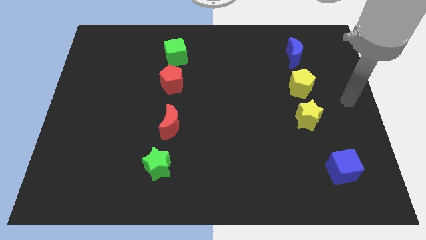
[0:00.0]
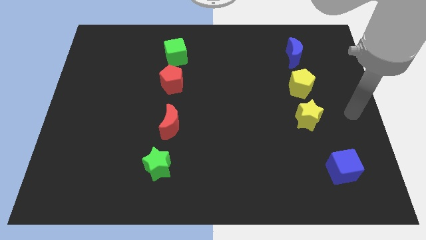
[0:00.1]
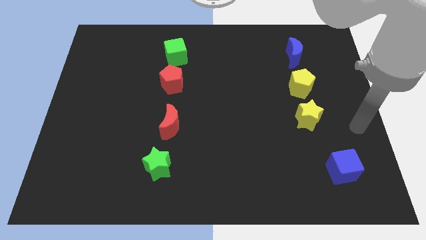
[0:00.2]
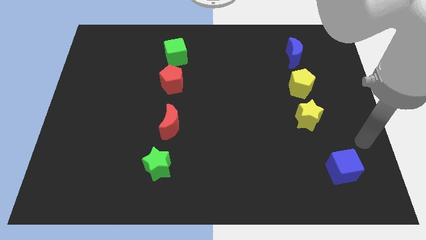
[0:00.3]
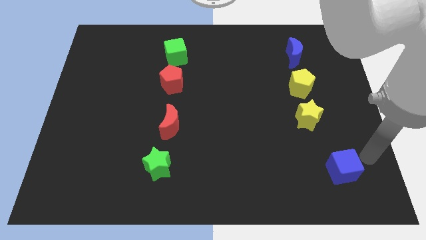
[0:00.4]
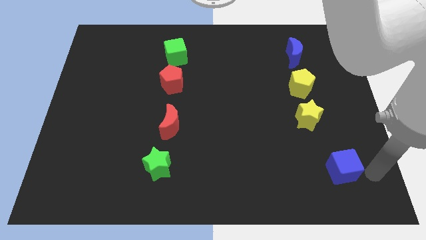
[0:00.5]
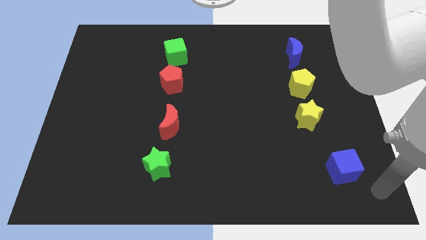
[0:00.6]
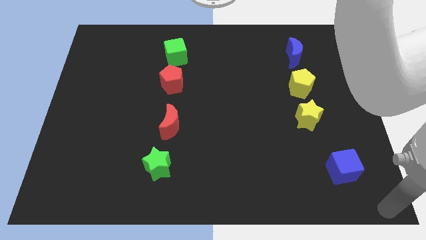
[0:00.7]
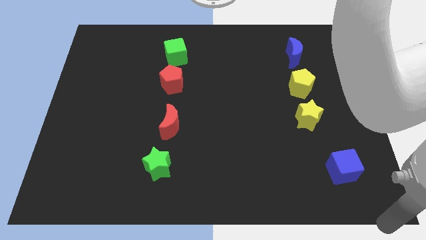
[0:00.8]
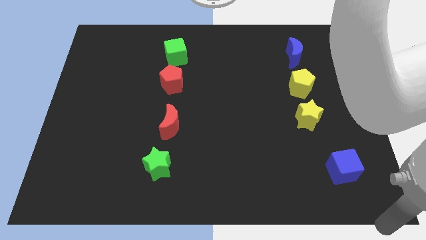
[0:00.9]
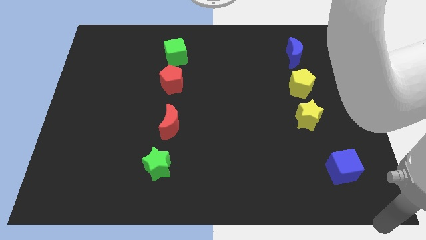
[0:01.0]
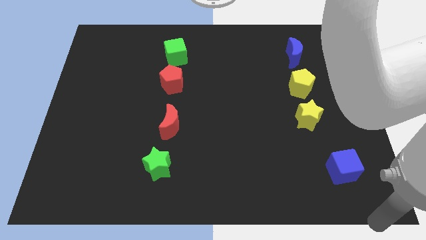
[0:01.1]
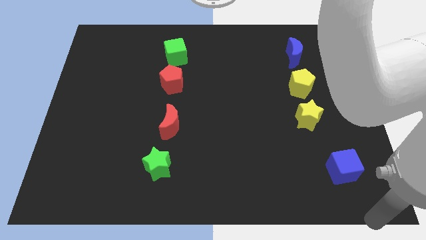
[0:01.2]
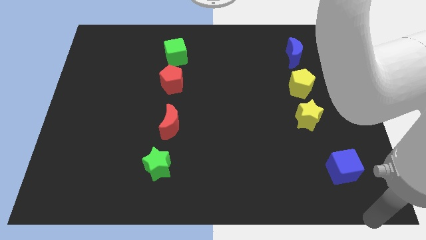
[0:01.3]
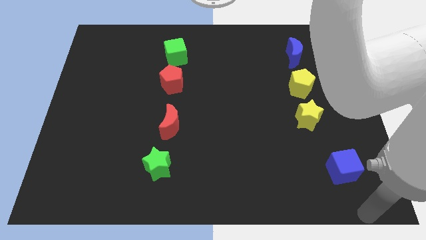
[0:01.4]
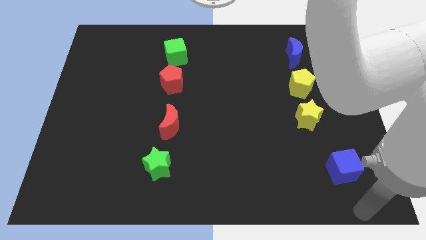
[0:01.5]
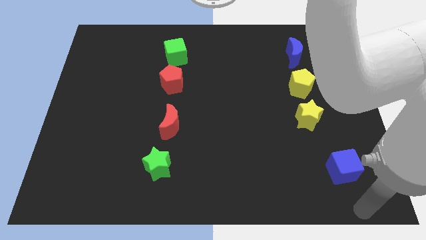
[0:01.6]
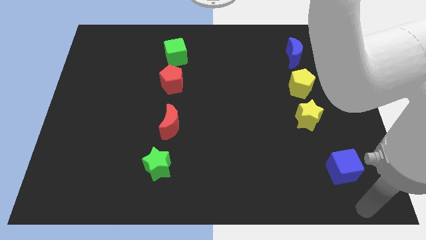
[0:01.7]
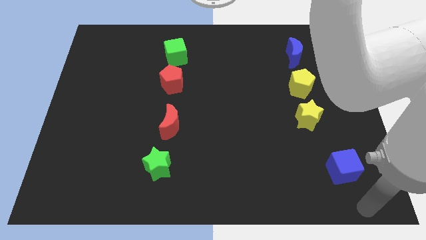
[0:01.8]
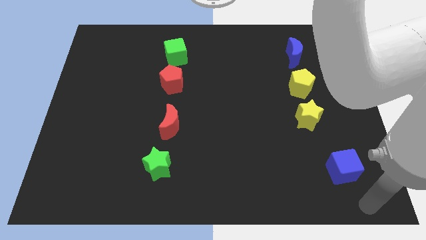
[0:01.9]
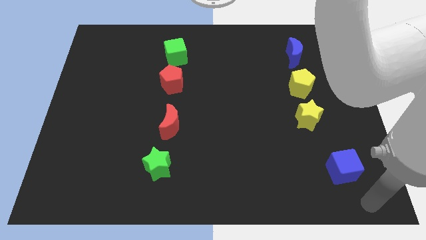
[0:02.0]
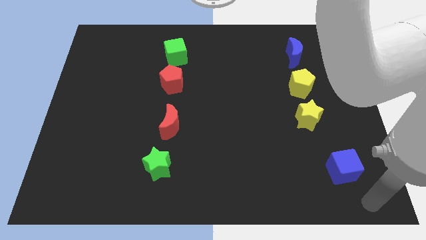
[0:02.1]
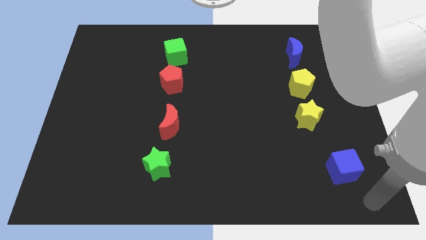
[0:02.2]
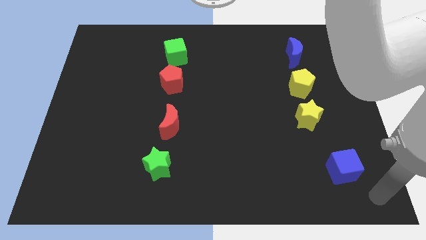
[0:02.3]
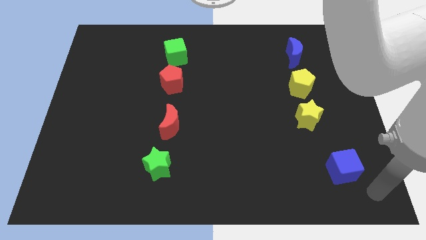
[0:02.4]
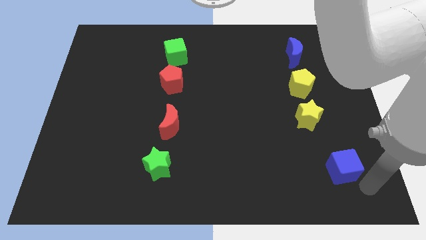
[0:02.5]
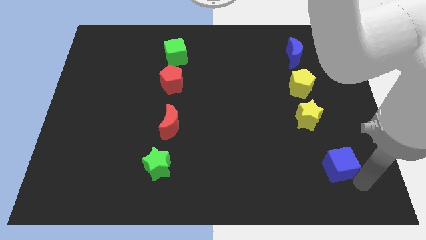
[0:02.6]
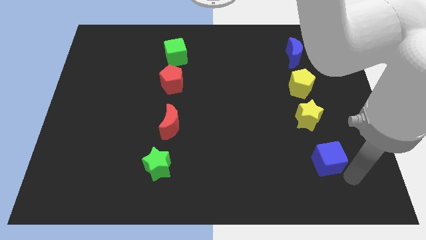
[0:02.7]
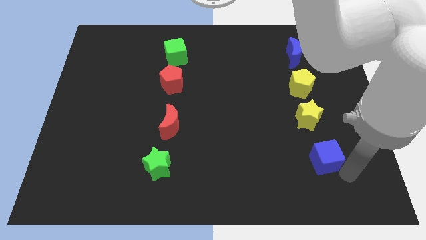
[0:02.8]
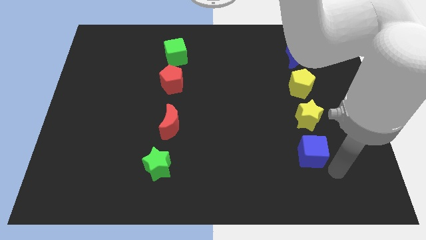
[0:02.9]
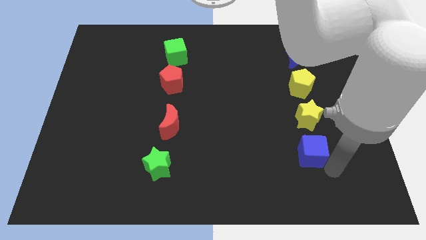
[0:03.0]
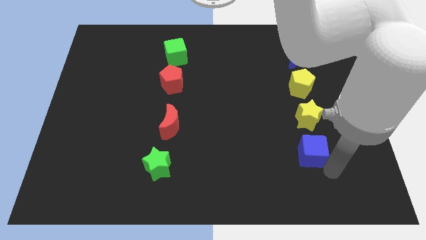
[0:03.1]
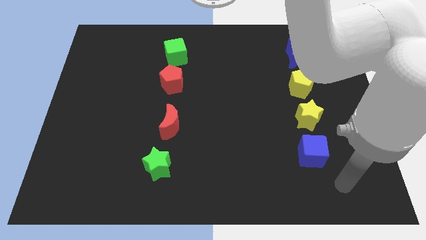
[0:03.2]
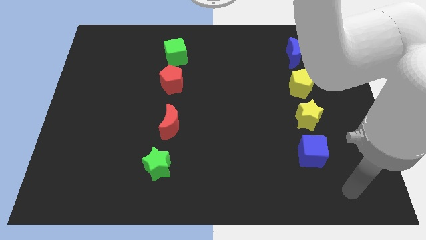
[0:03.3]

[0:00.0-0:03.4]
place the blue cube below the yellow star

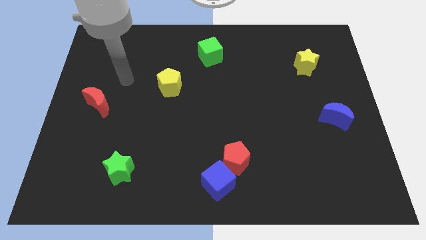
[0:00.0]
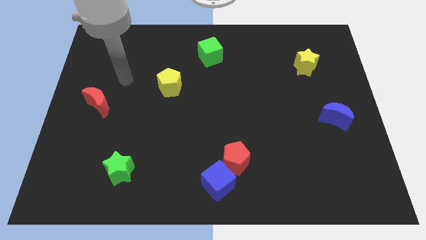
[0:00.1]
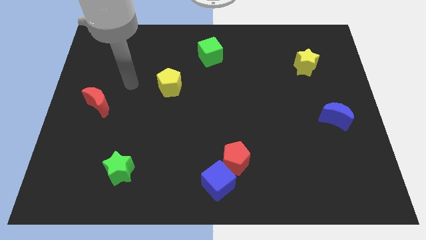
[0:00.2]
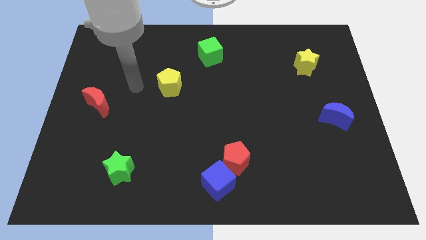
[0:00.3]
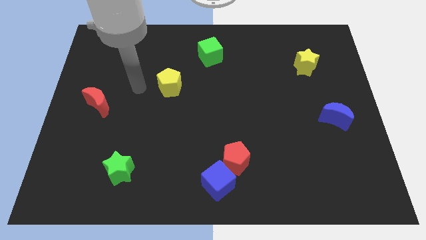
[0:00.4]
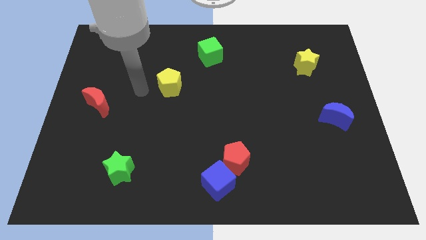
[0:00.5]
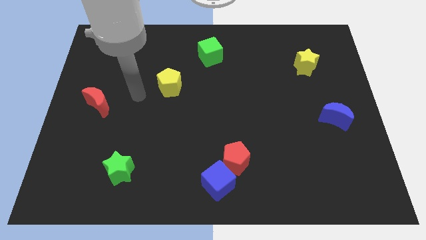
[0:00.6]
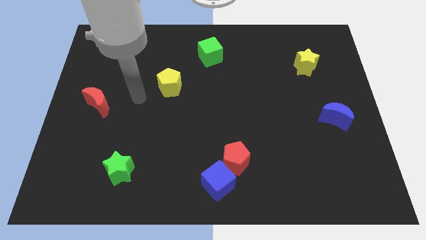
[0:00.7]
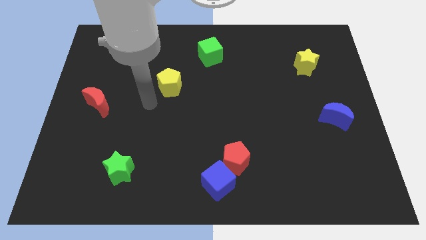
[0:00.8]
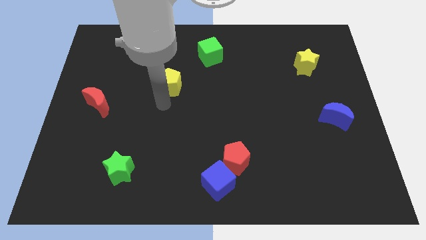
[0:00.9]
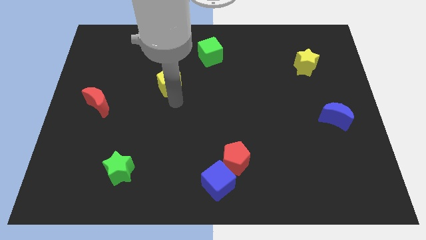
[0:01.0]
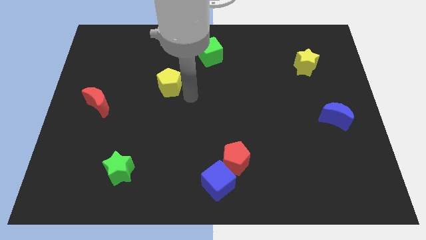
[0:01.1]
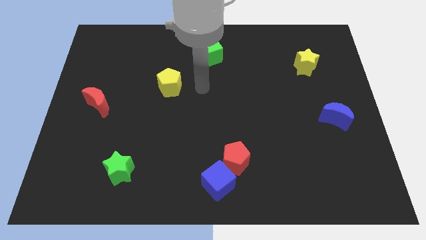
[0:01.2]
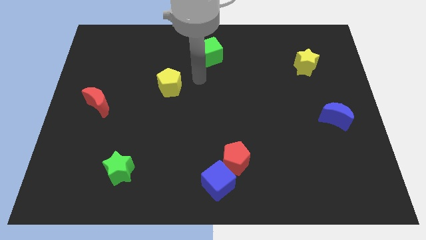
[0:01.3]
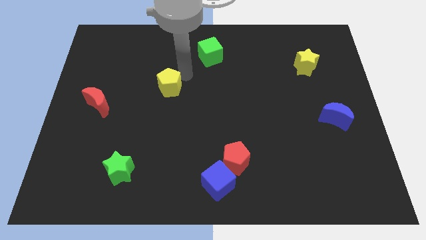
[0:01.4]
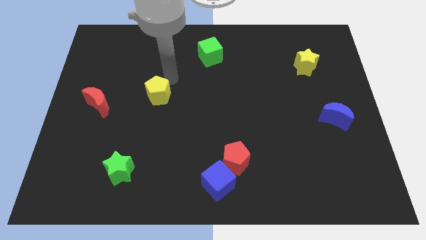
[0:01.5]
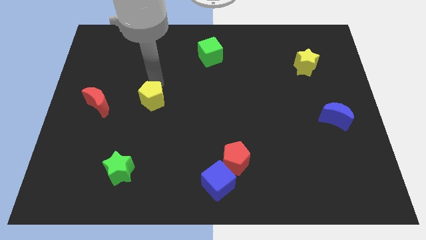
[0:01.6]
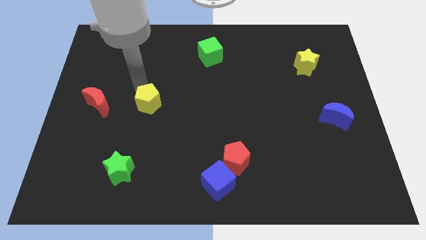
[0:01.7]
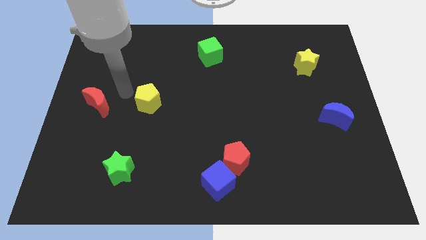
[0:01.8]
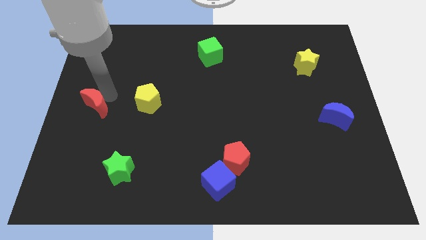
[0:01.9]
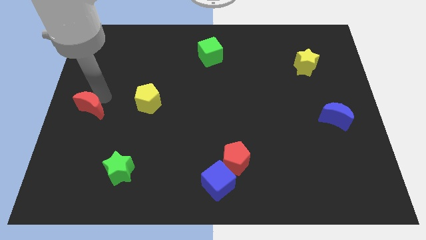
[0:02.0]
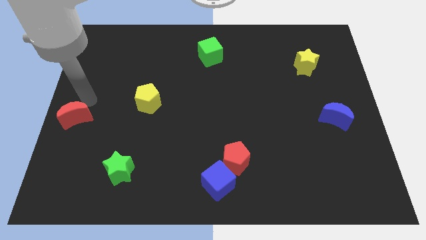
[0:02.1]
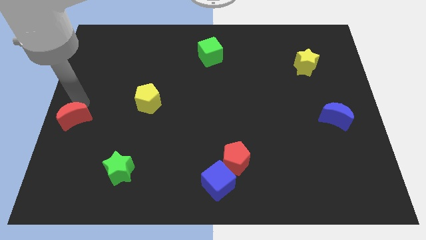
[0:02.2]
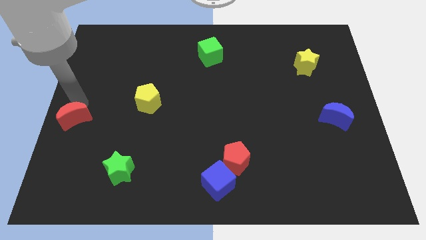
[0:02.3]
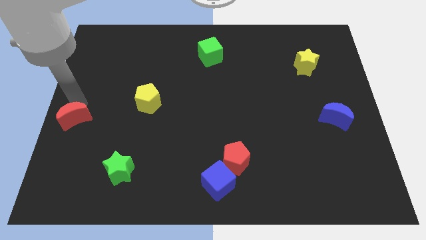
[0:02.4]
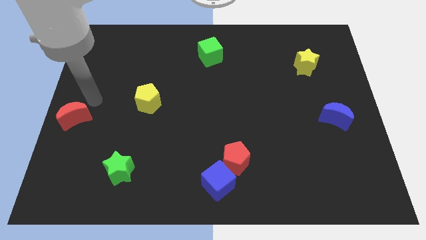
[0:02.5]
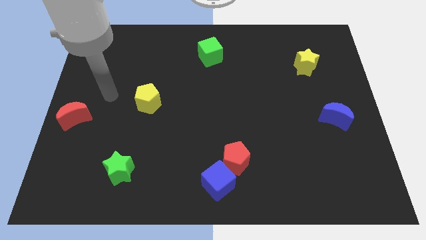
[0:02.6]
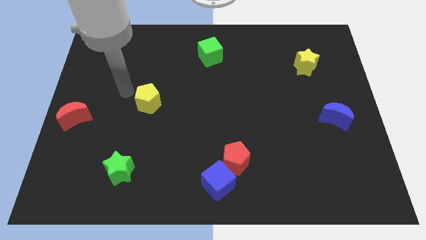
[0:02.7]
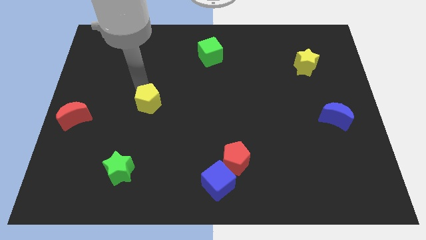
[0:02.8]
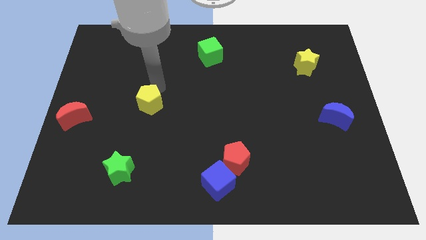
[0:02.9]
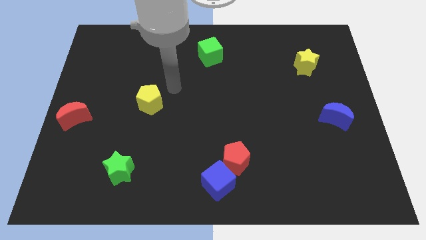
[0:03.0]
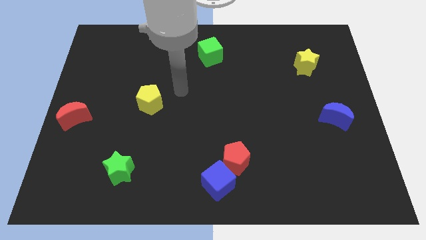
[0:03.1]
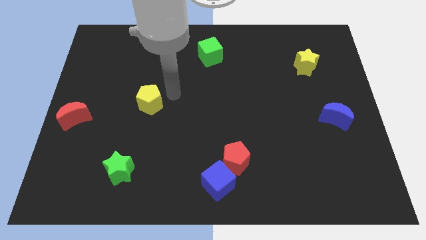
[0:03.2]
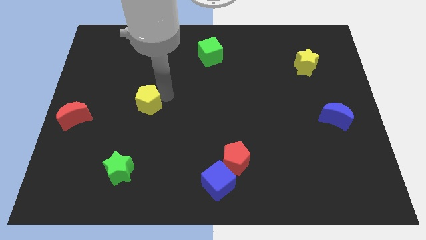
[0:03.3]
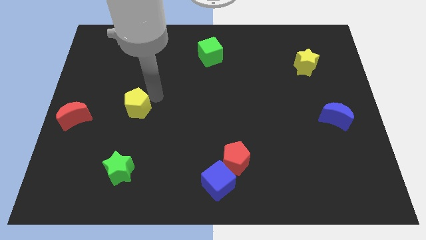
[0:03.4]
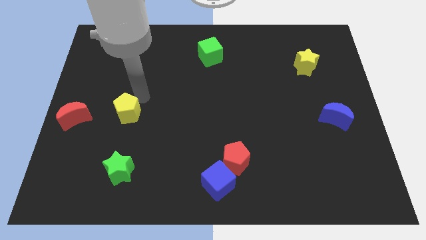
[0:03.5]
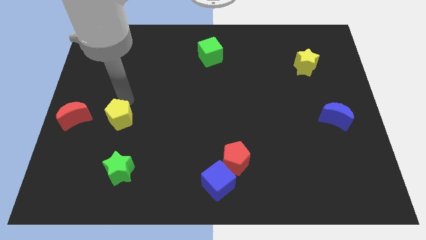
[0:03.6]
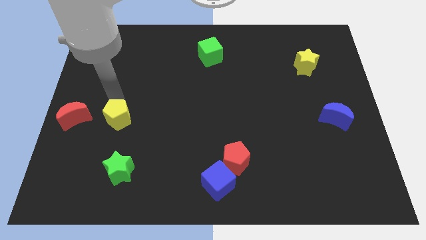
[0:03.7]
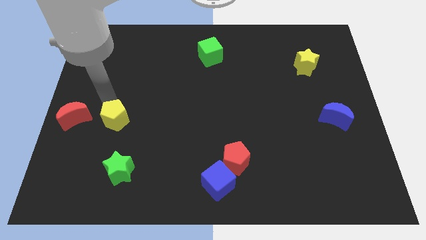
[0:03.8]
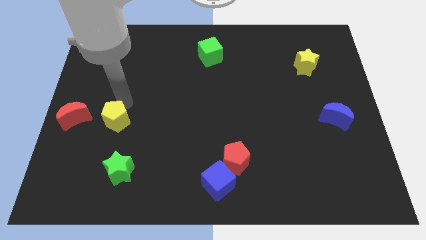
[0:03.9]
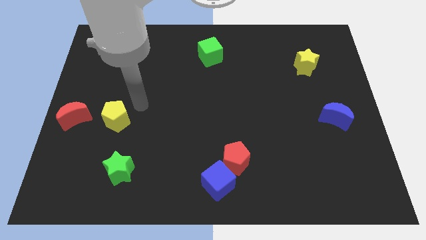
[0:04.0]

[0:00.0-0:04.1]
push the red moon and yellow pentagon towards the center left of the board

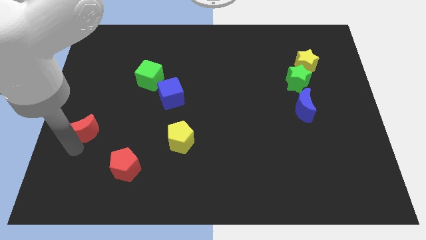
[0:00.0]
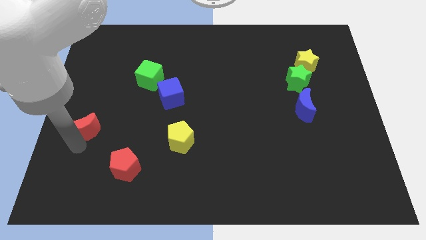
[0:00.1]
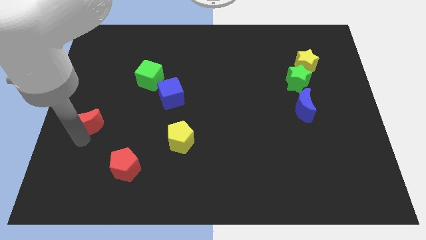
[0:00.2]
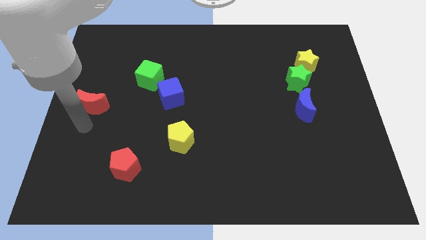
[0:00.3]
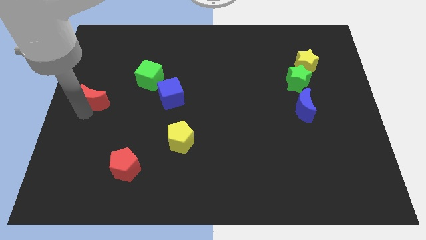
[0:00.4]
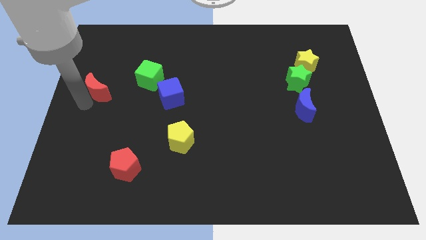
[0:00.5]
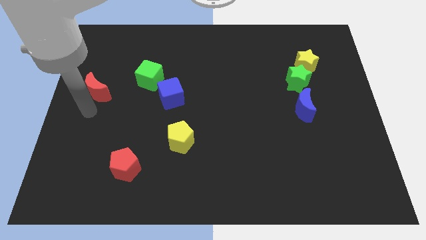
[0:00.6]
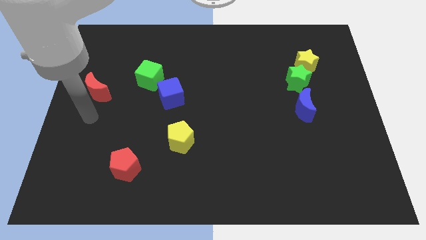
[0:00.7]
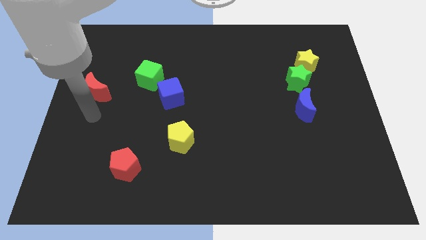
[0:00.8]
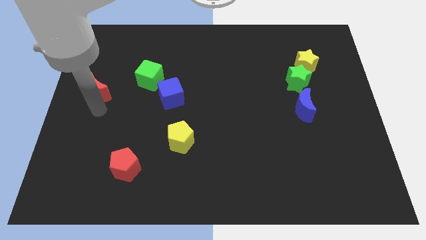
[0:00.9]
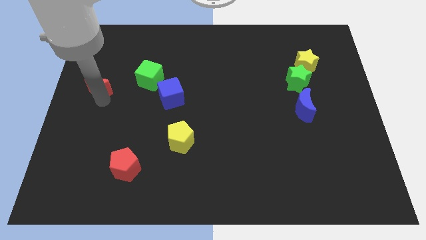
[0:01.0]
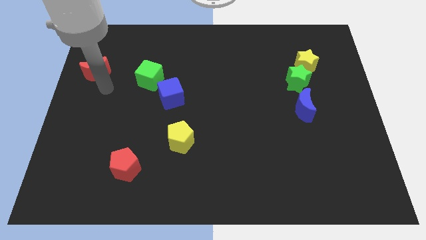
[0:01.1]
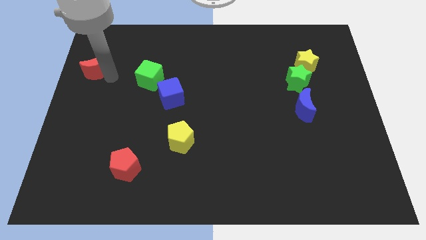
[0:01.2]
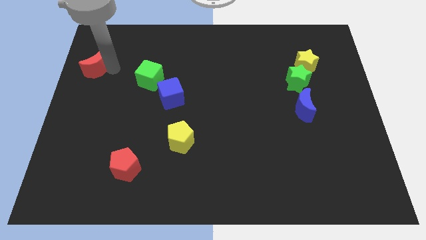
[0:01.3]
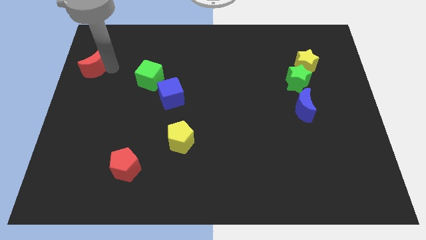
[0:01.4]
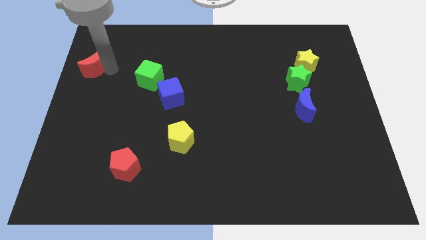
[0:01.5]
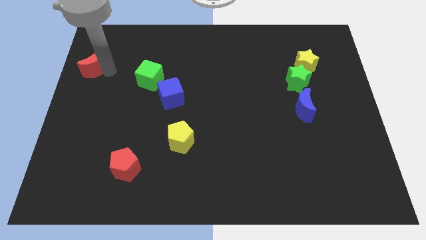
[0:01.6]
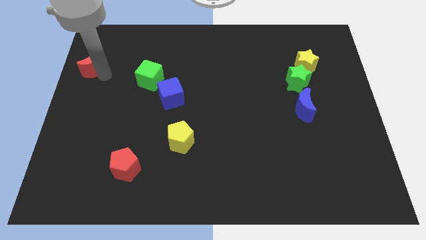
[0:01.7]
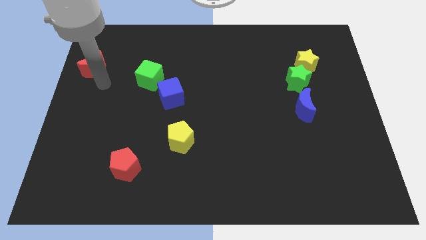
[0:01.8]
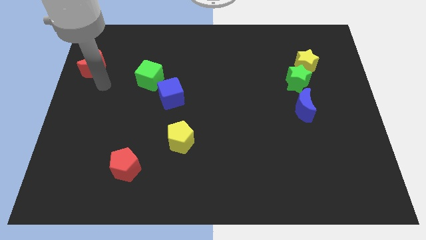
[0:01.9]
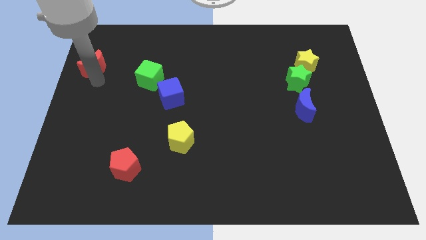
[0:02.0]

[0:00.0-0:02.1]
push the red crescent to the top left of the board
